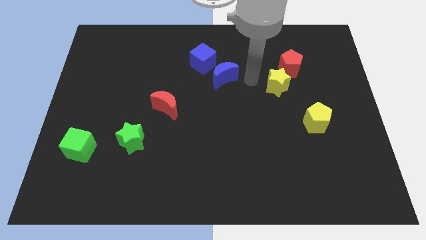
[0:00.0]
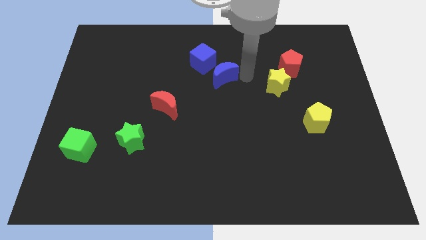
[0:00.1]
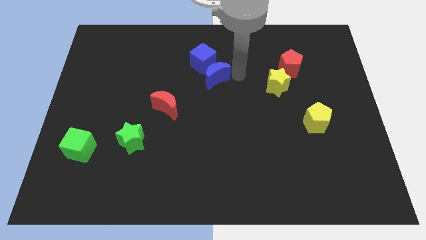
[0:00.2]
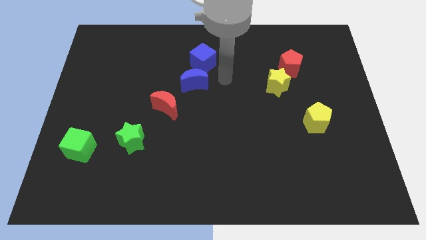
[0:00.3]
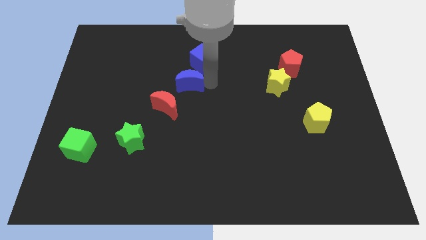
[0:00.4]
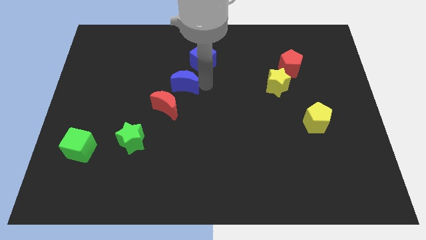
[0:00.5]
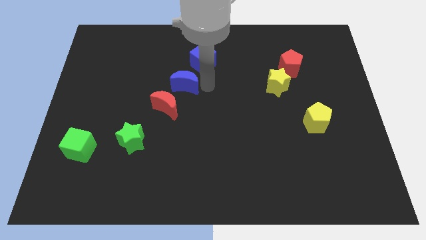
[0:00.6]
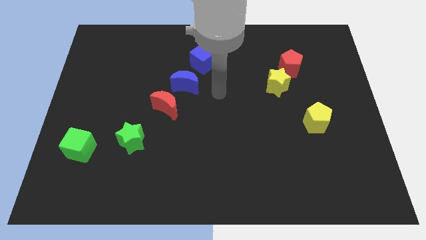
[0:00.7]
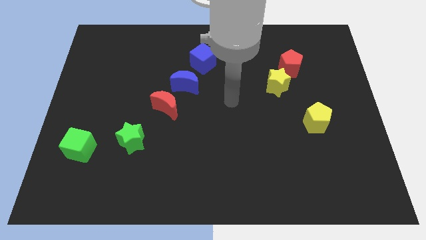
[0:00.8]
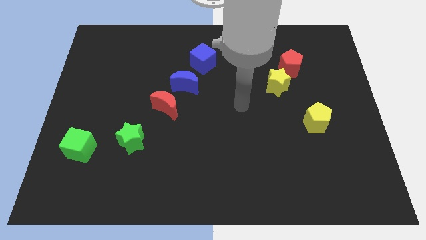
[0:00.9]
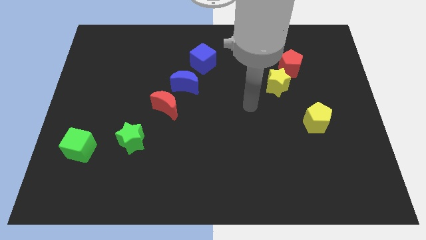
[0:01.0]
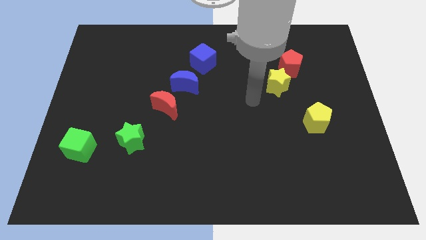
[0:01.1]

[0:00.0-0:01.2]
push blue crescent towards the top right to the red crescent

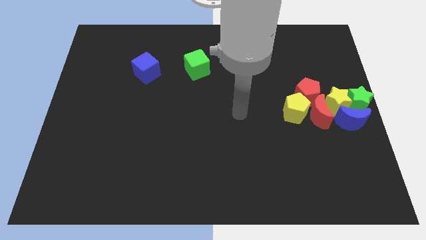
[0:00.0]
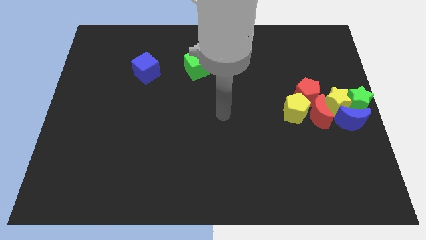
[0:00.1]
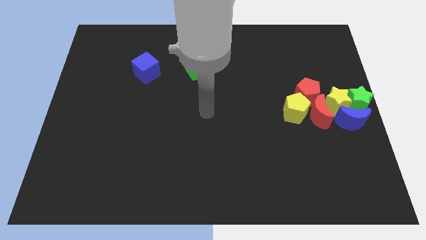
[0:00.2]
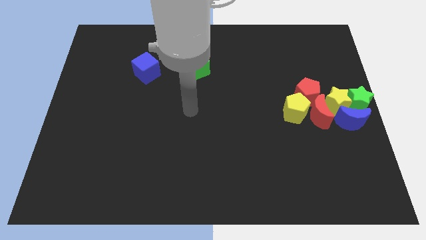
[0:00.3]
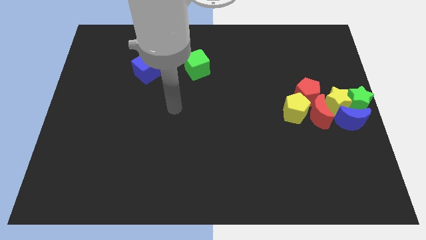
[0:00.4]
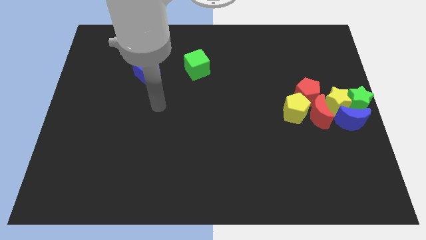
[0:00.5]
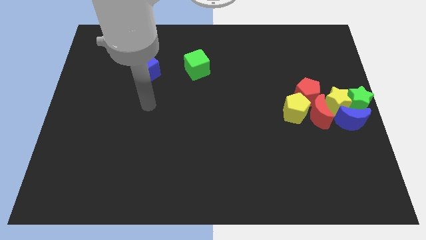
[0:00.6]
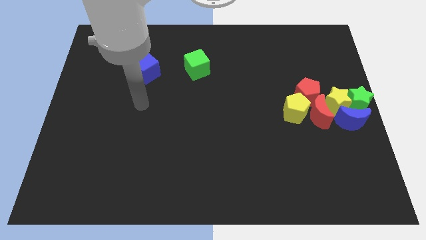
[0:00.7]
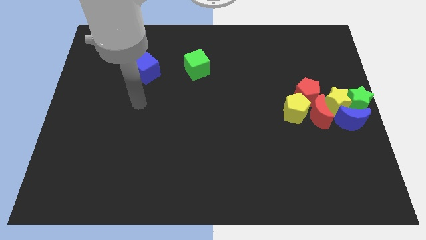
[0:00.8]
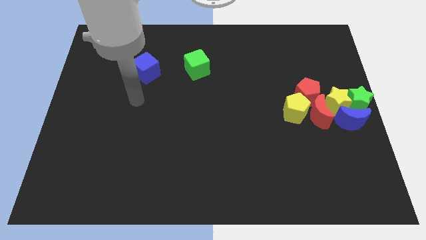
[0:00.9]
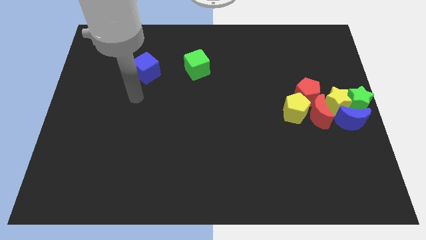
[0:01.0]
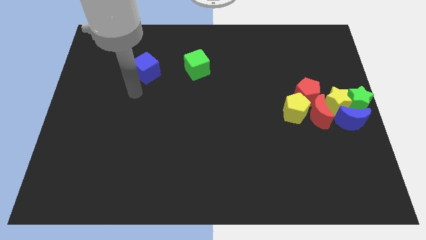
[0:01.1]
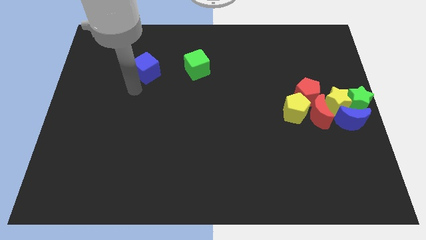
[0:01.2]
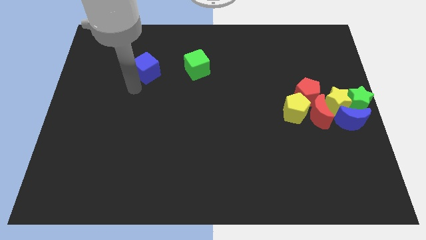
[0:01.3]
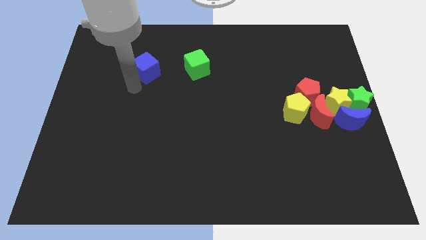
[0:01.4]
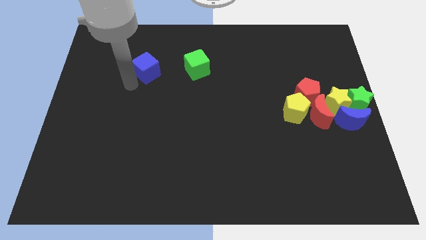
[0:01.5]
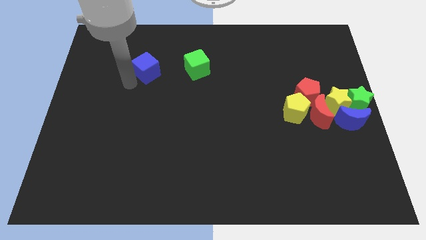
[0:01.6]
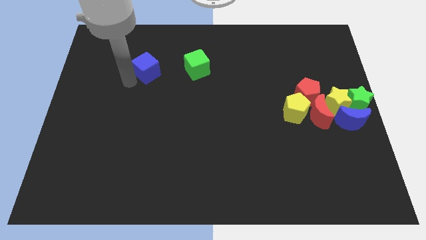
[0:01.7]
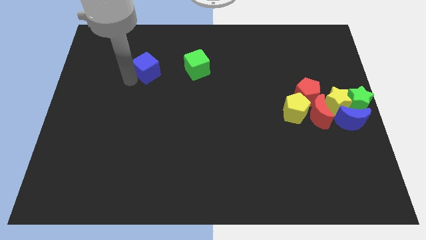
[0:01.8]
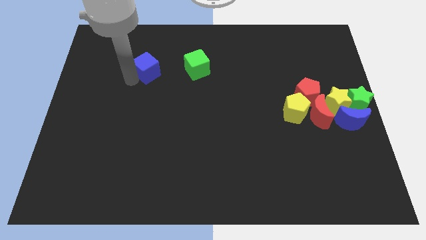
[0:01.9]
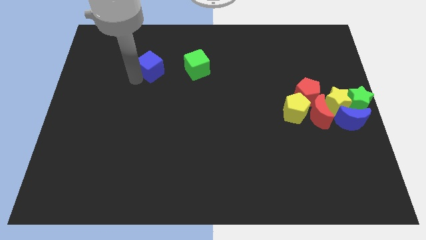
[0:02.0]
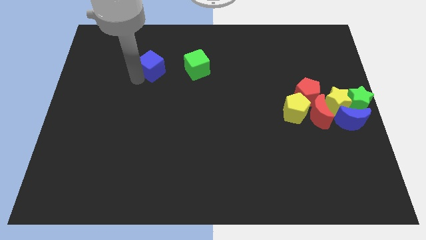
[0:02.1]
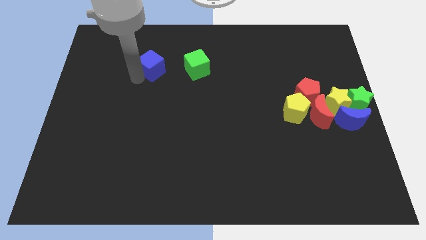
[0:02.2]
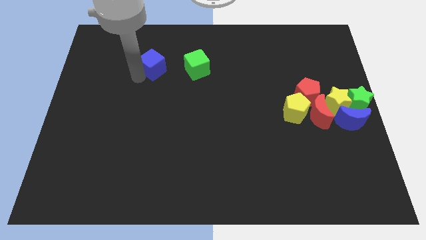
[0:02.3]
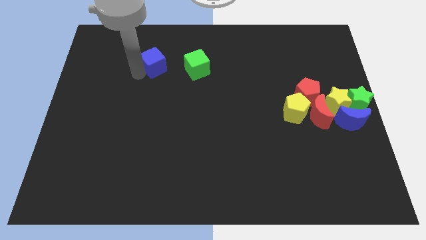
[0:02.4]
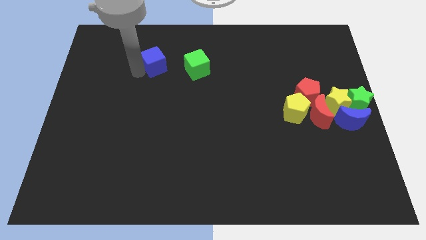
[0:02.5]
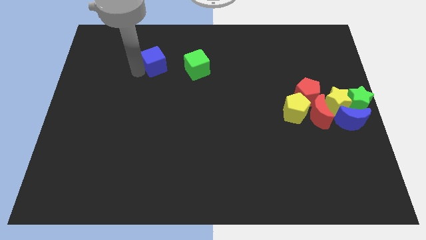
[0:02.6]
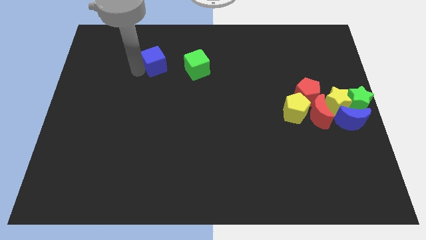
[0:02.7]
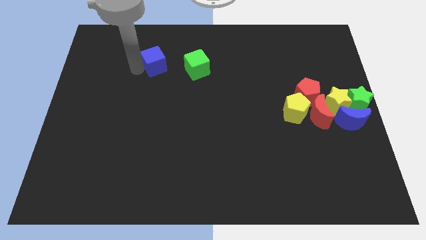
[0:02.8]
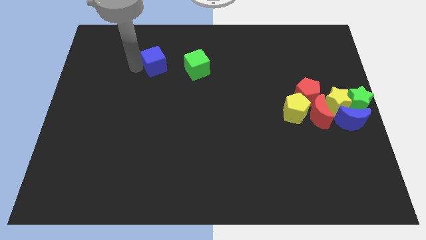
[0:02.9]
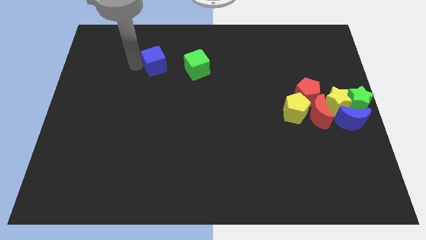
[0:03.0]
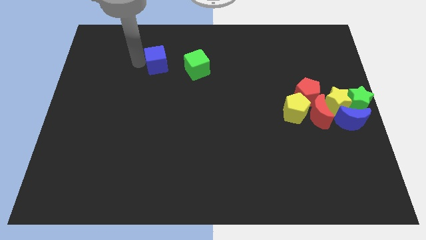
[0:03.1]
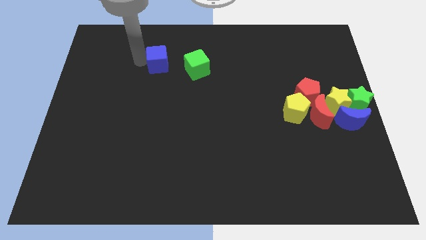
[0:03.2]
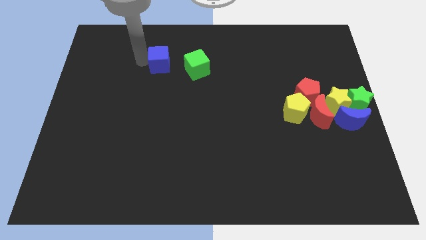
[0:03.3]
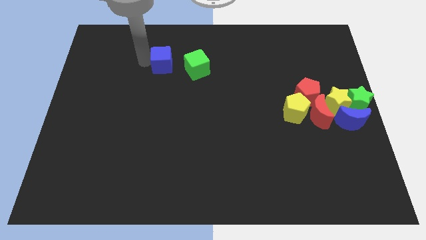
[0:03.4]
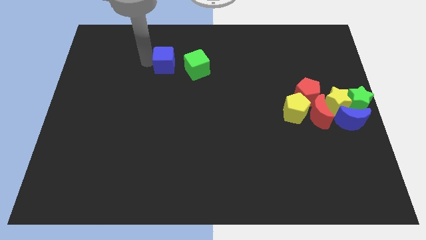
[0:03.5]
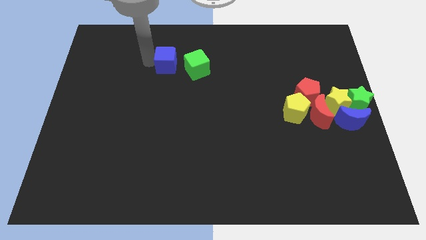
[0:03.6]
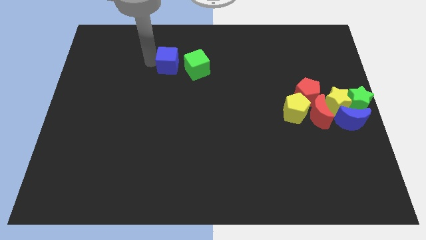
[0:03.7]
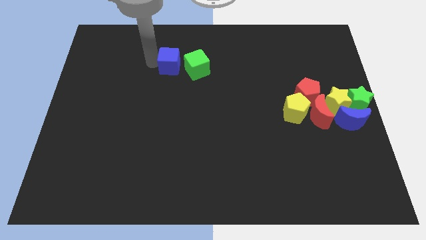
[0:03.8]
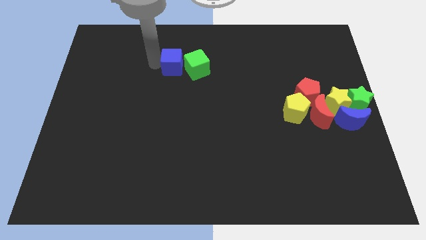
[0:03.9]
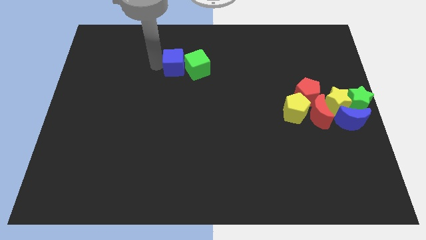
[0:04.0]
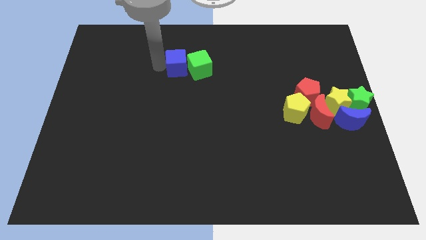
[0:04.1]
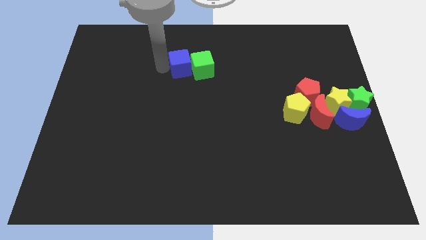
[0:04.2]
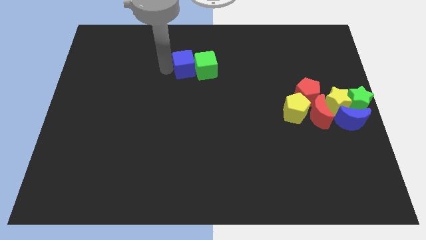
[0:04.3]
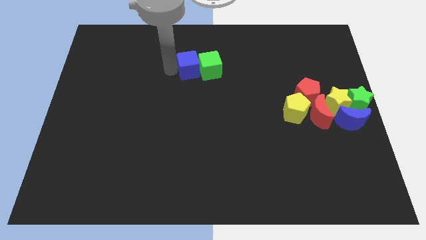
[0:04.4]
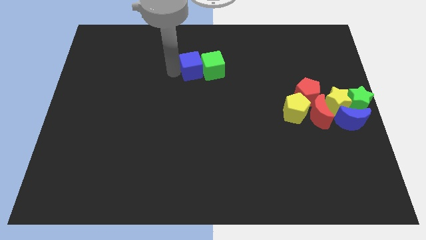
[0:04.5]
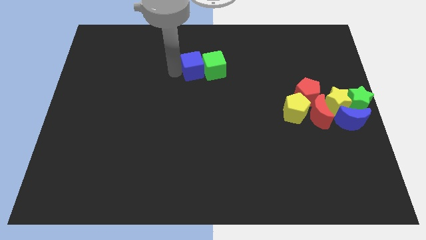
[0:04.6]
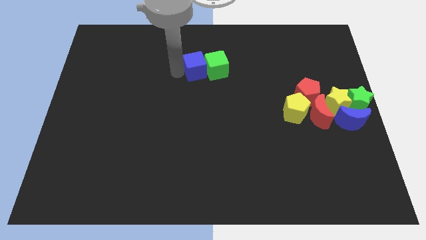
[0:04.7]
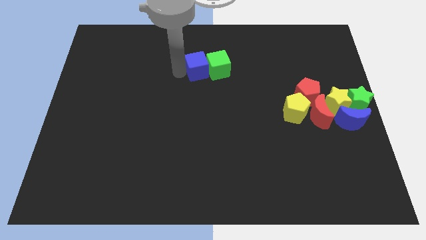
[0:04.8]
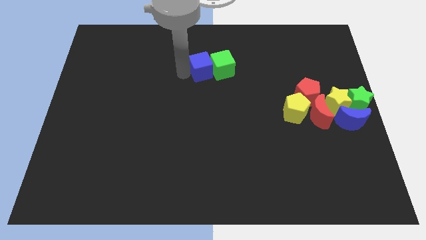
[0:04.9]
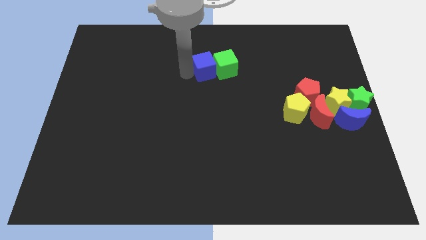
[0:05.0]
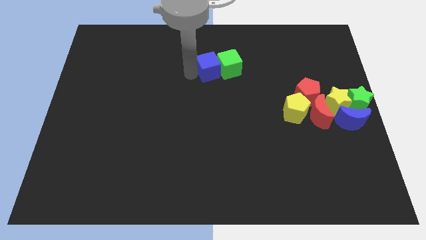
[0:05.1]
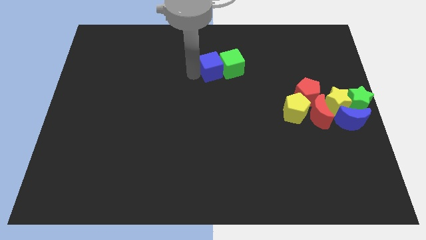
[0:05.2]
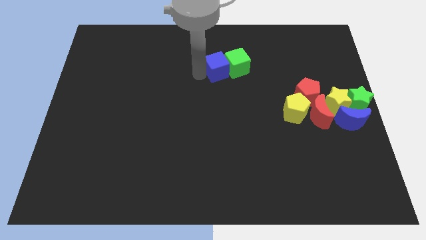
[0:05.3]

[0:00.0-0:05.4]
move the blue cube to the left of the green cube

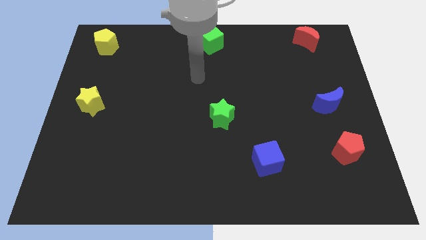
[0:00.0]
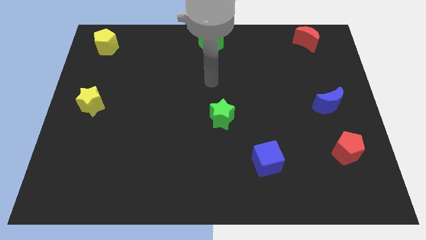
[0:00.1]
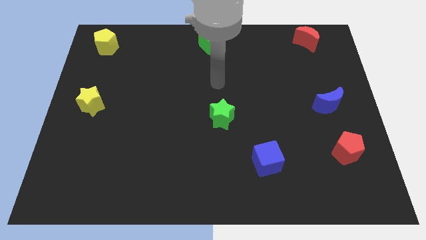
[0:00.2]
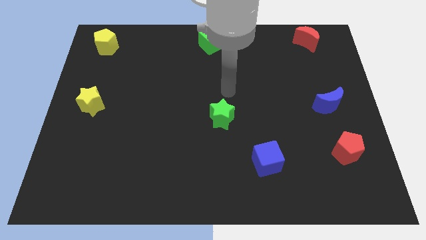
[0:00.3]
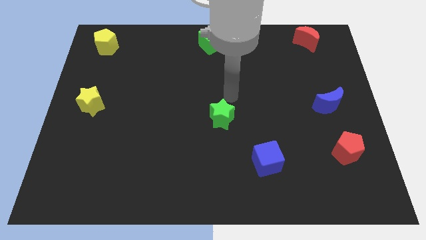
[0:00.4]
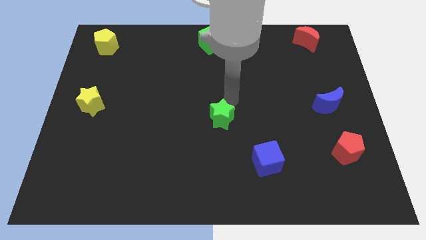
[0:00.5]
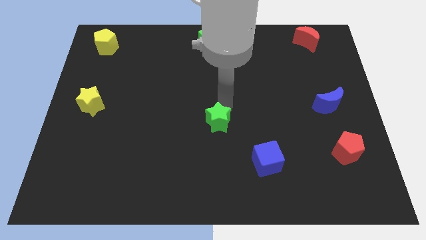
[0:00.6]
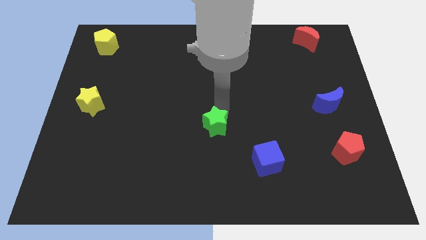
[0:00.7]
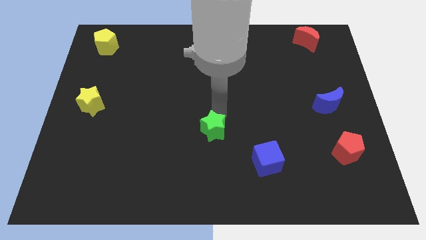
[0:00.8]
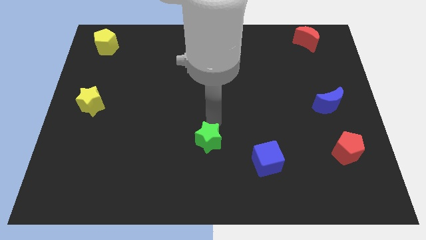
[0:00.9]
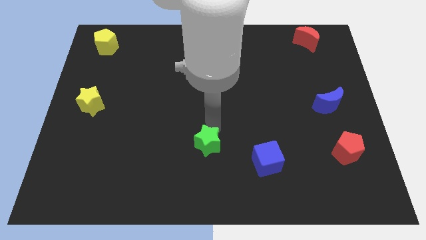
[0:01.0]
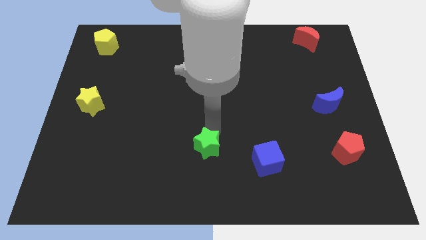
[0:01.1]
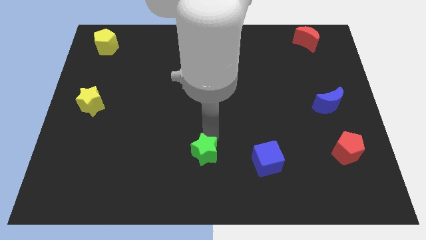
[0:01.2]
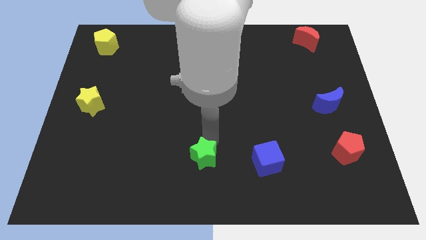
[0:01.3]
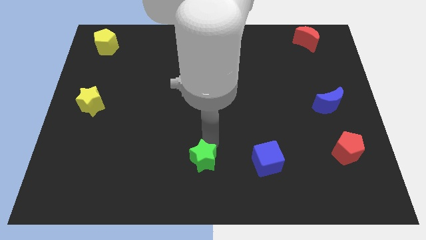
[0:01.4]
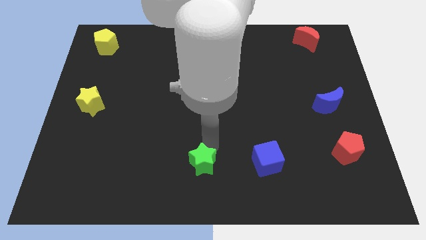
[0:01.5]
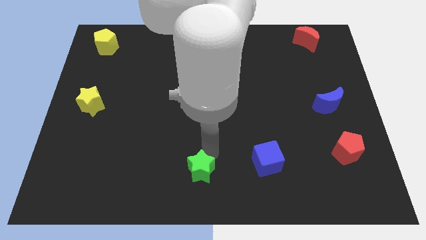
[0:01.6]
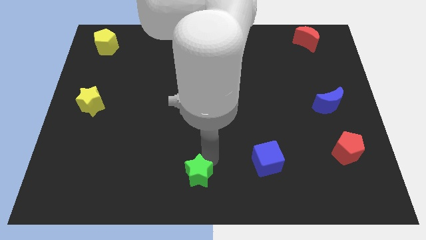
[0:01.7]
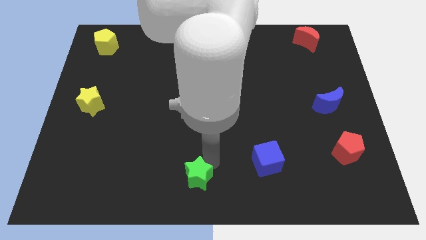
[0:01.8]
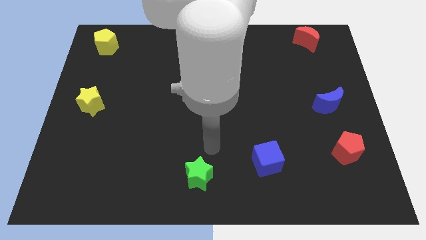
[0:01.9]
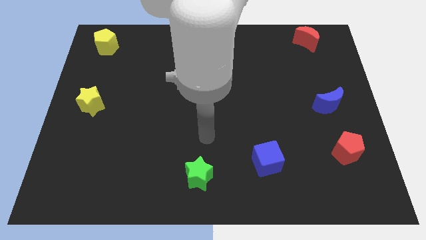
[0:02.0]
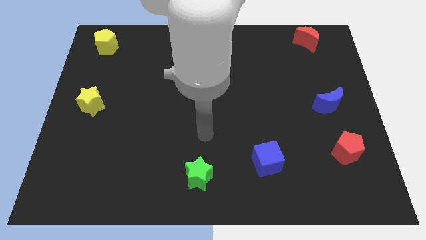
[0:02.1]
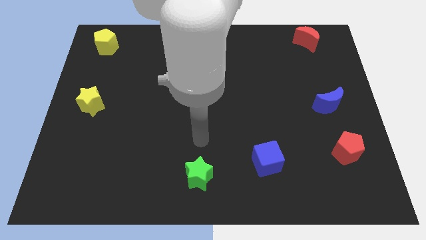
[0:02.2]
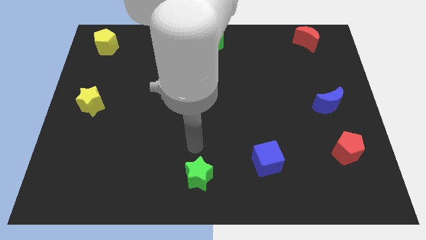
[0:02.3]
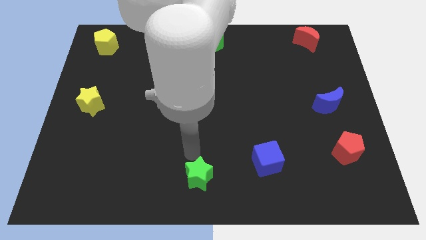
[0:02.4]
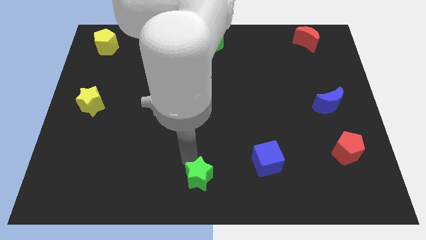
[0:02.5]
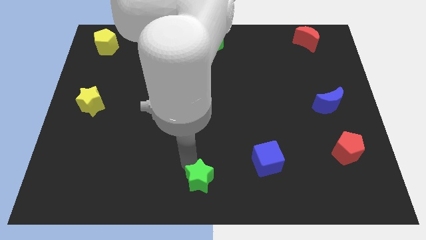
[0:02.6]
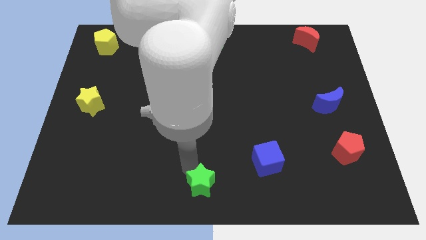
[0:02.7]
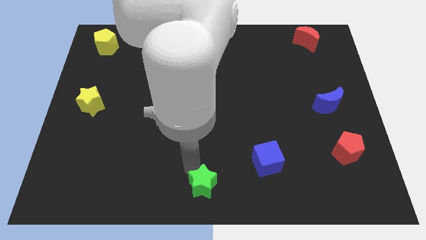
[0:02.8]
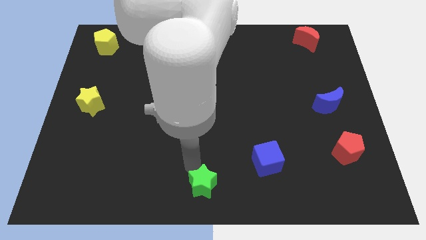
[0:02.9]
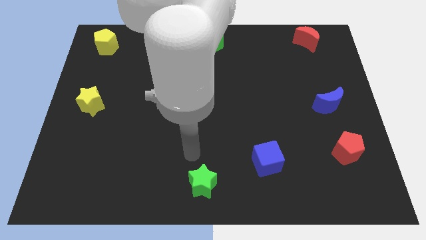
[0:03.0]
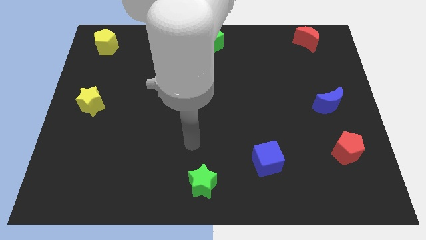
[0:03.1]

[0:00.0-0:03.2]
place the green star towards the center bottom of the board
